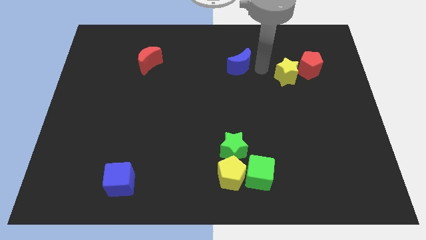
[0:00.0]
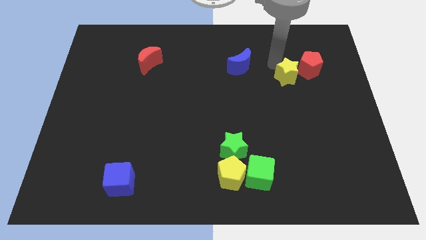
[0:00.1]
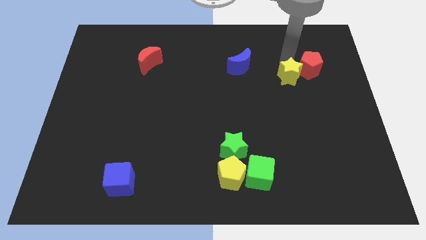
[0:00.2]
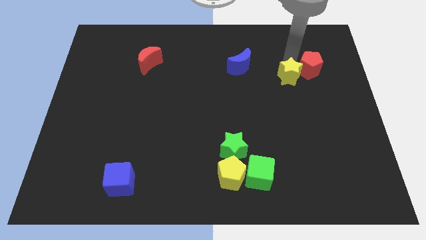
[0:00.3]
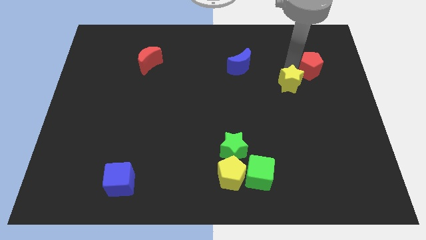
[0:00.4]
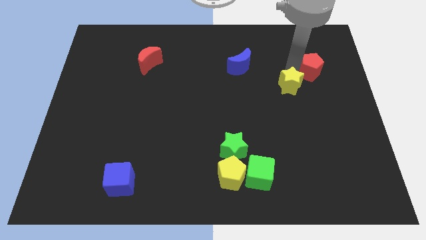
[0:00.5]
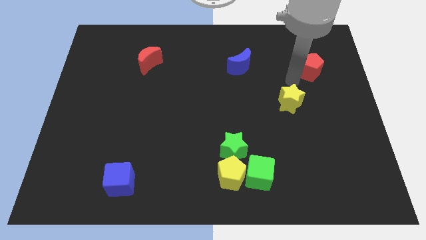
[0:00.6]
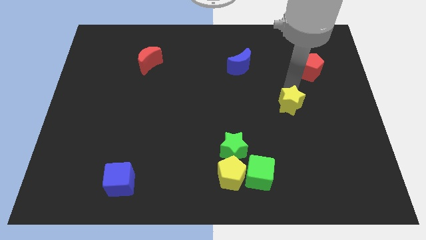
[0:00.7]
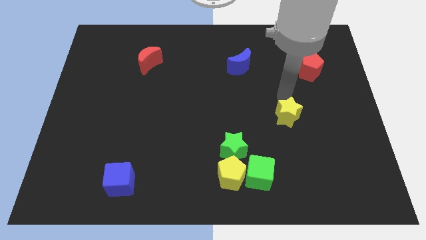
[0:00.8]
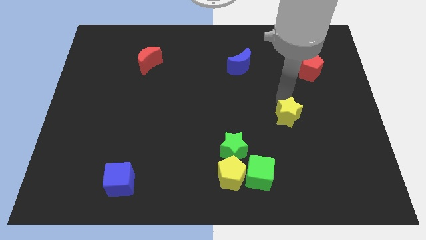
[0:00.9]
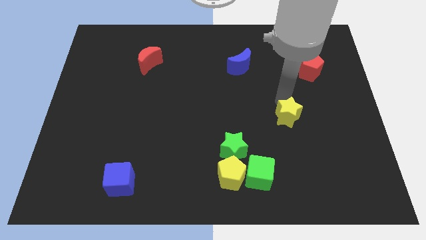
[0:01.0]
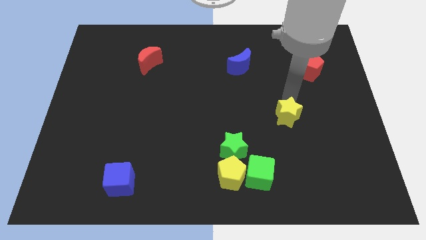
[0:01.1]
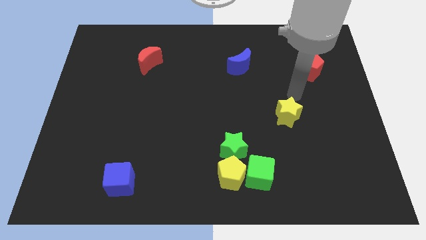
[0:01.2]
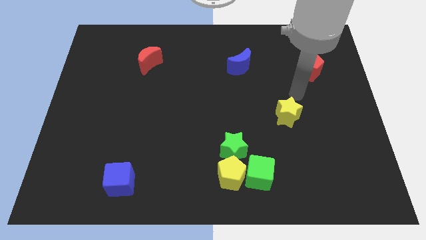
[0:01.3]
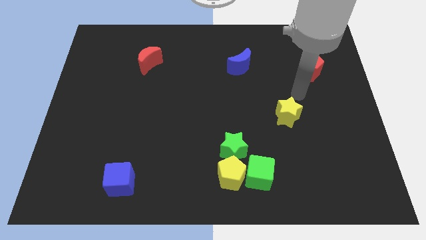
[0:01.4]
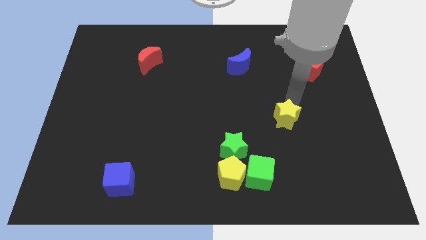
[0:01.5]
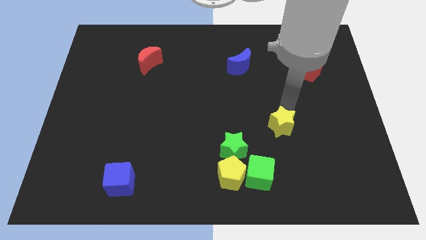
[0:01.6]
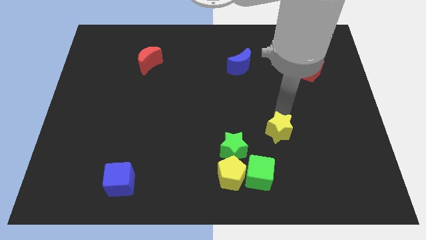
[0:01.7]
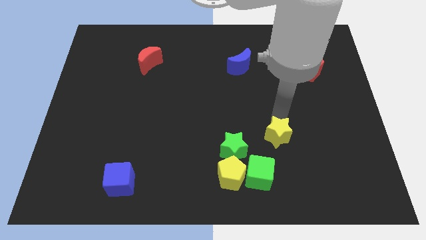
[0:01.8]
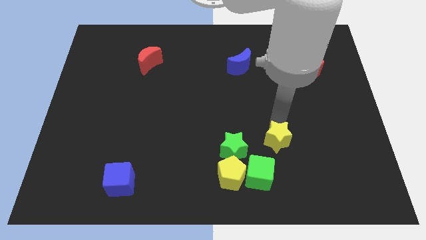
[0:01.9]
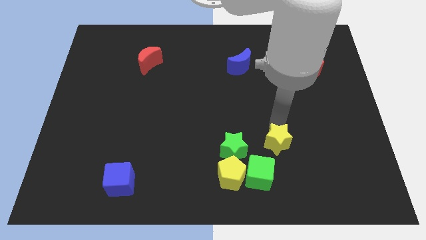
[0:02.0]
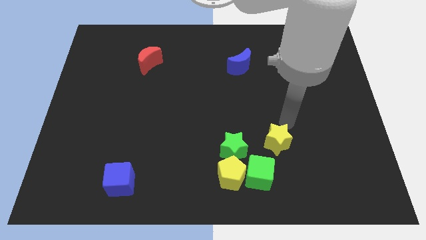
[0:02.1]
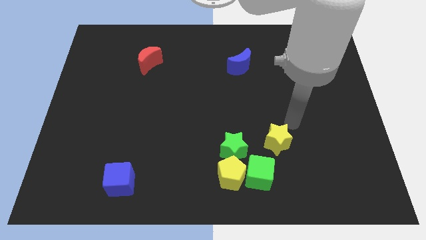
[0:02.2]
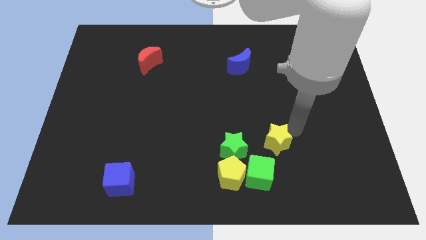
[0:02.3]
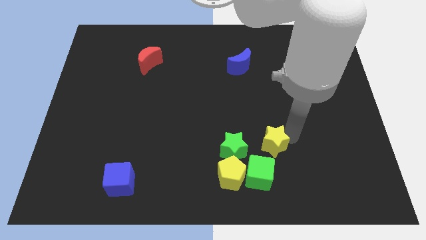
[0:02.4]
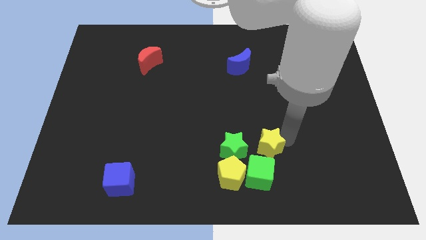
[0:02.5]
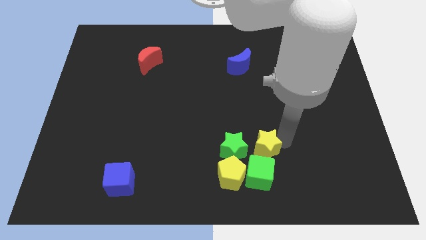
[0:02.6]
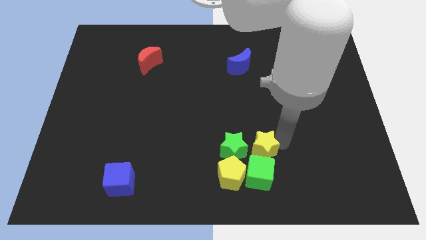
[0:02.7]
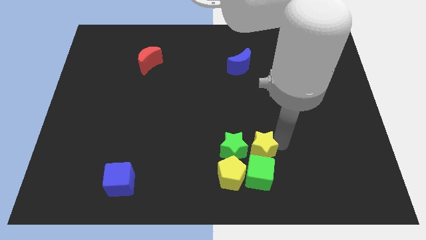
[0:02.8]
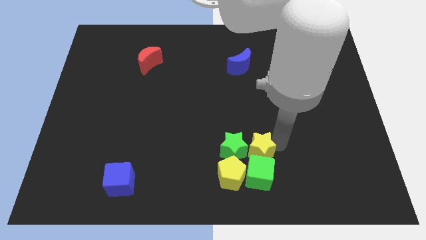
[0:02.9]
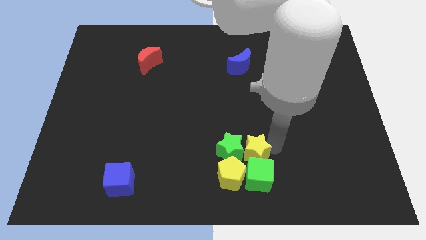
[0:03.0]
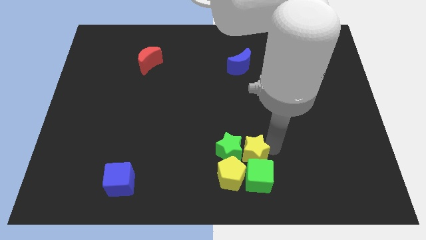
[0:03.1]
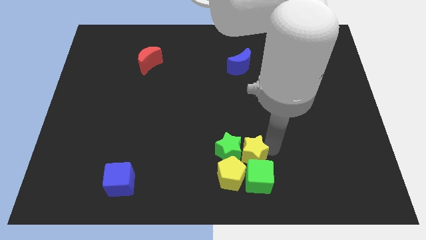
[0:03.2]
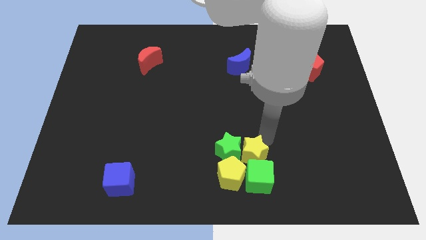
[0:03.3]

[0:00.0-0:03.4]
add the yellow star to the group of both green blocks and yellow pentagon

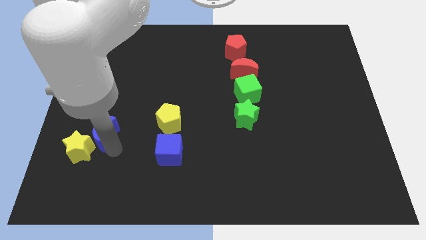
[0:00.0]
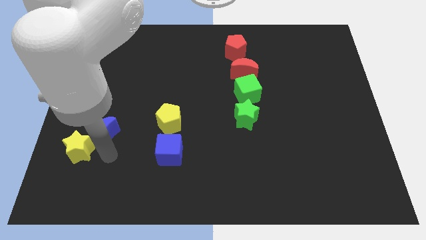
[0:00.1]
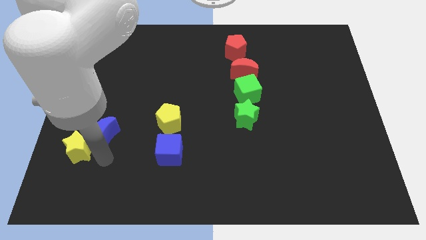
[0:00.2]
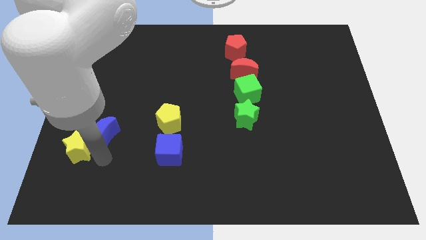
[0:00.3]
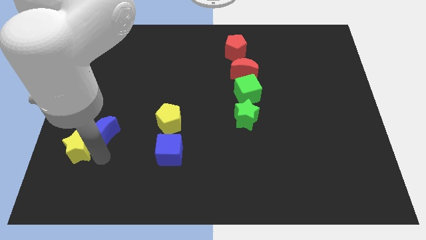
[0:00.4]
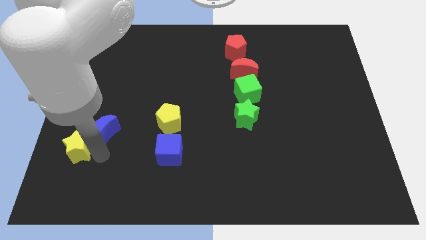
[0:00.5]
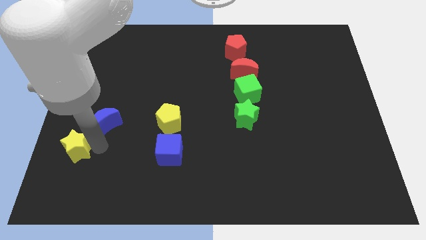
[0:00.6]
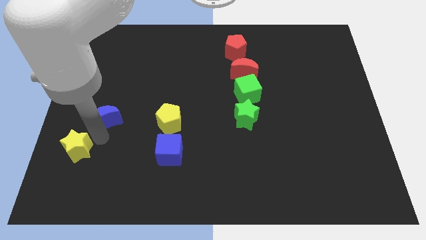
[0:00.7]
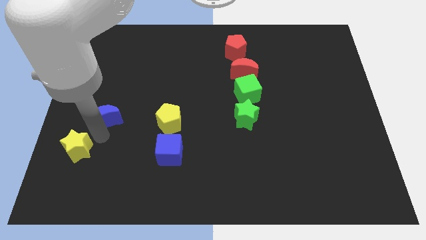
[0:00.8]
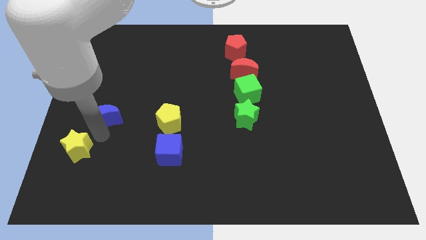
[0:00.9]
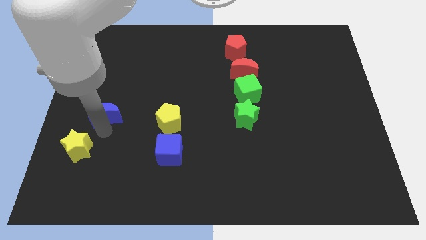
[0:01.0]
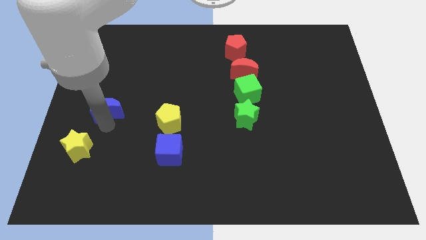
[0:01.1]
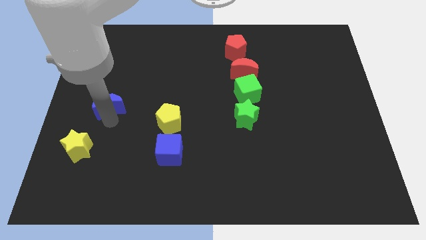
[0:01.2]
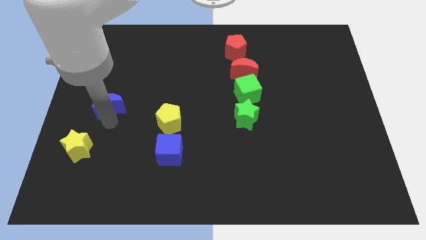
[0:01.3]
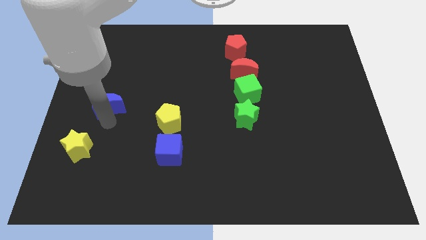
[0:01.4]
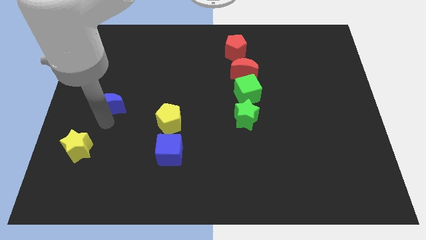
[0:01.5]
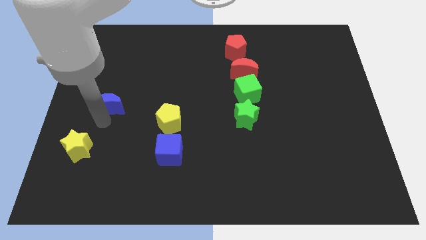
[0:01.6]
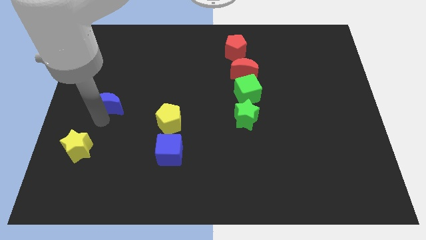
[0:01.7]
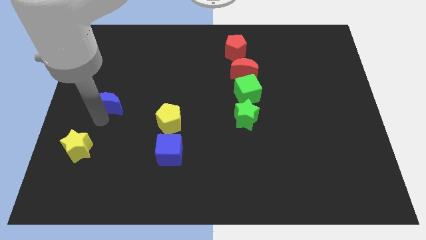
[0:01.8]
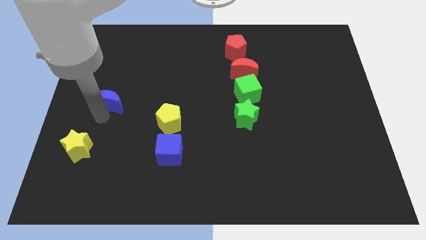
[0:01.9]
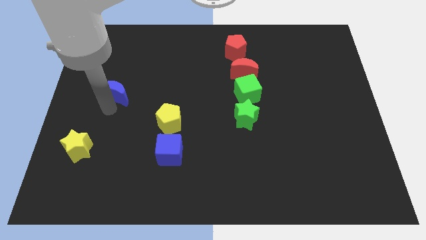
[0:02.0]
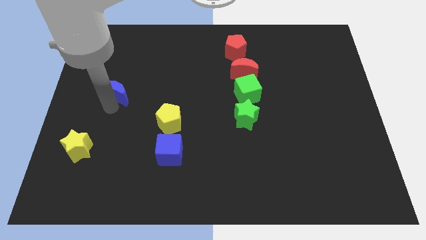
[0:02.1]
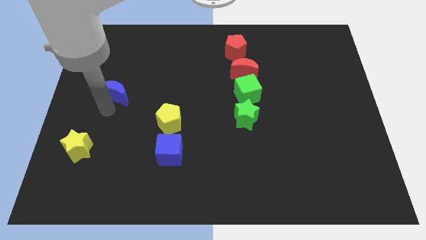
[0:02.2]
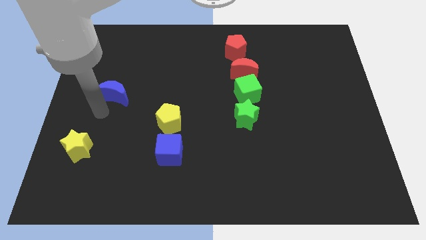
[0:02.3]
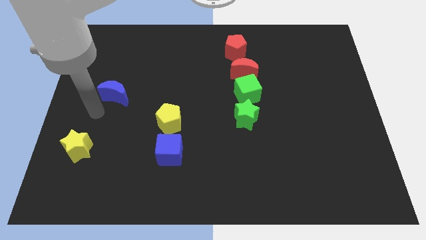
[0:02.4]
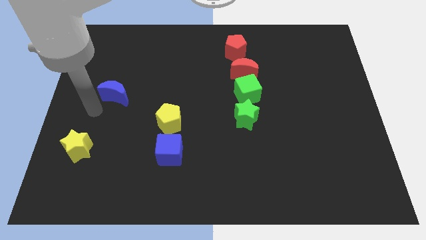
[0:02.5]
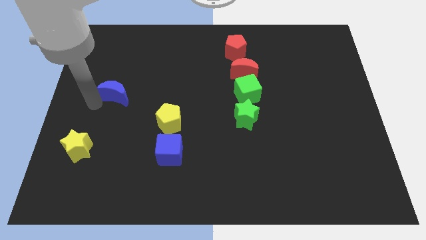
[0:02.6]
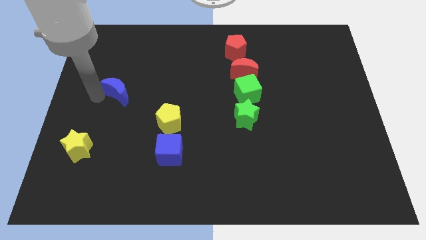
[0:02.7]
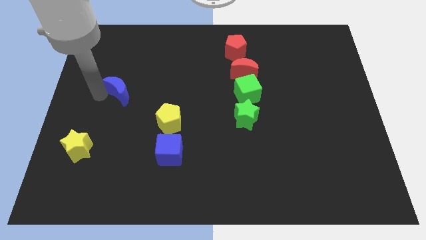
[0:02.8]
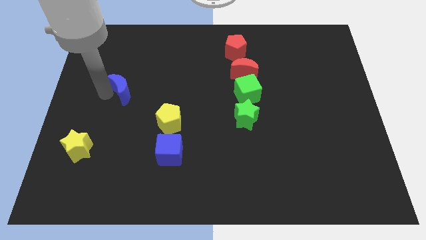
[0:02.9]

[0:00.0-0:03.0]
place the blue moon diagonally to the right of the yellow star

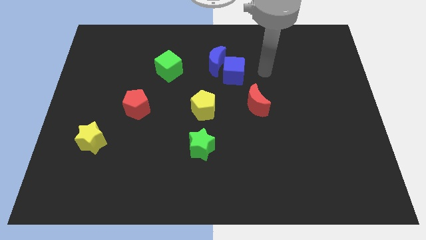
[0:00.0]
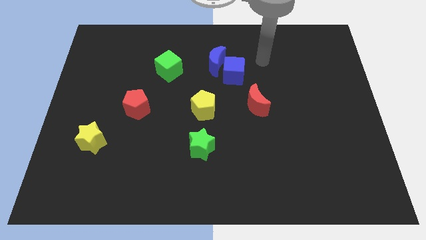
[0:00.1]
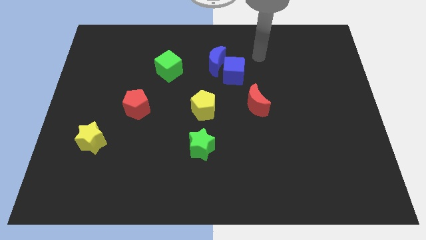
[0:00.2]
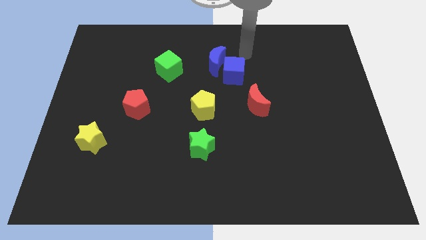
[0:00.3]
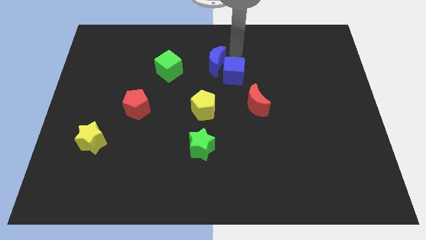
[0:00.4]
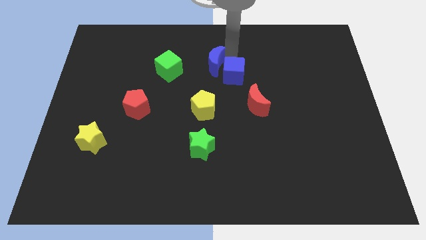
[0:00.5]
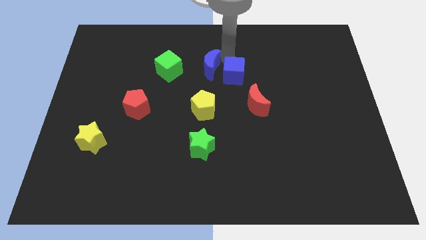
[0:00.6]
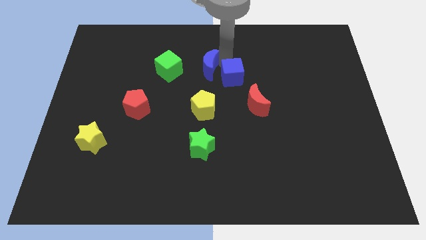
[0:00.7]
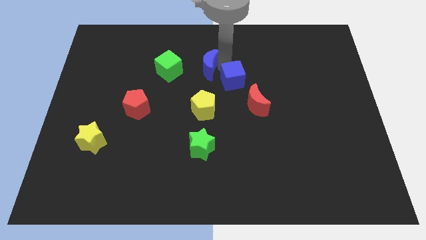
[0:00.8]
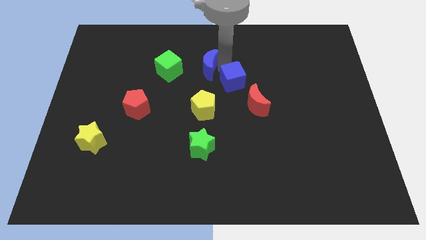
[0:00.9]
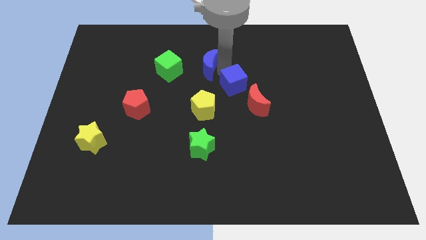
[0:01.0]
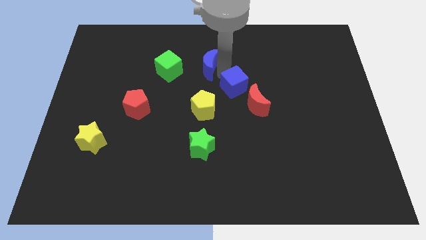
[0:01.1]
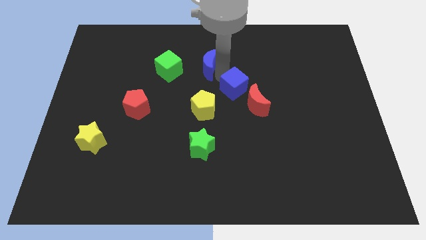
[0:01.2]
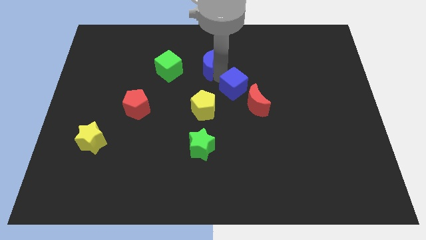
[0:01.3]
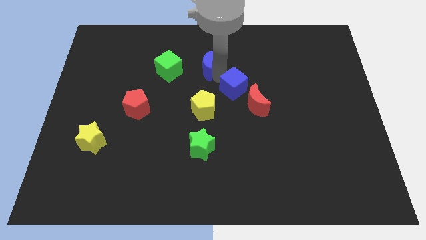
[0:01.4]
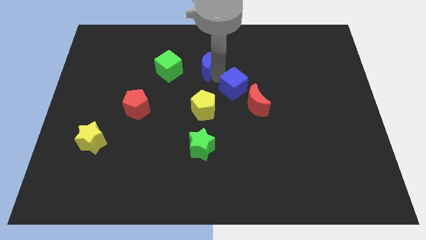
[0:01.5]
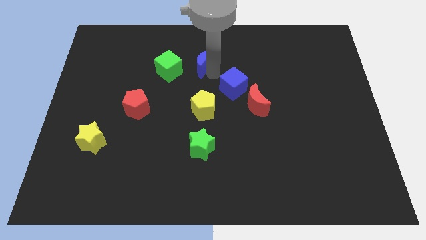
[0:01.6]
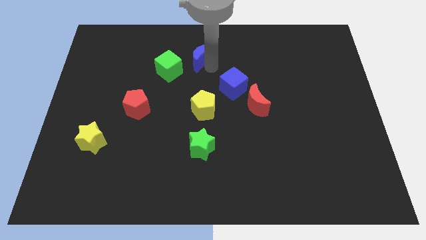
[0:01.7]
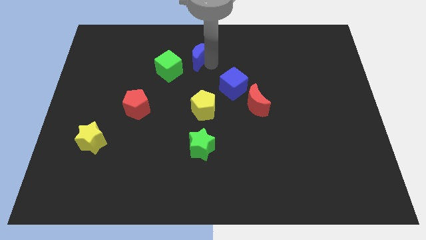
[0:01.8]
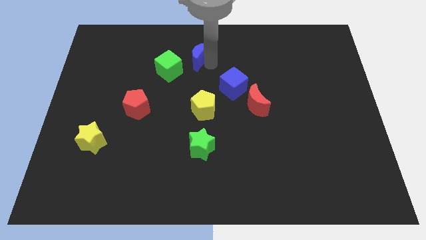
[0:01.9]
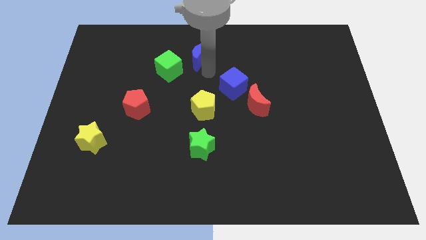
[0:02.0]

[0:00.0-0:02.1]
separate the blue blocks from each other

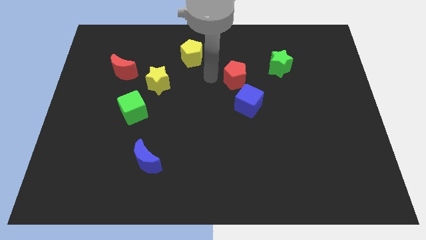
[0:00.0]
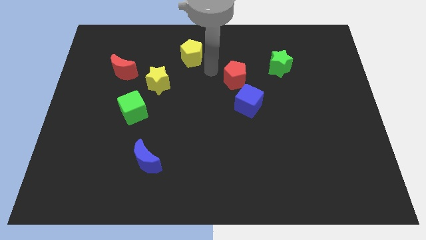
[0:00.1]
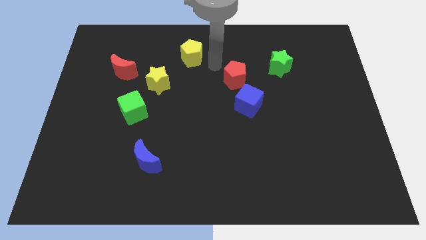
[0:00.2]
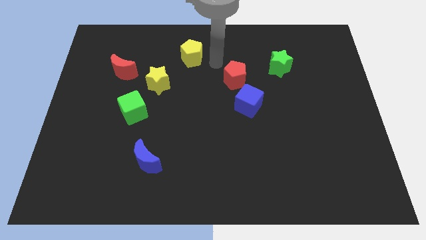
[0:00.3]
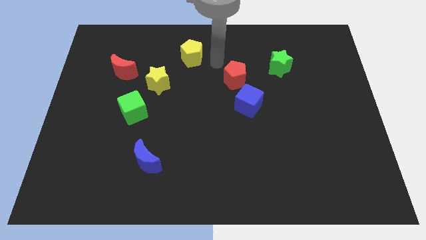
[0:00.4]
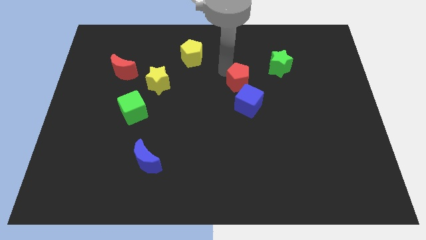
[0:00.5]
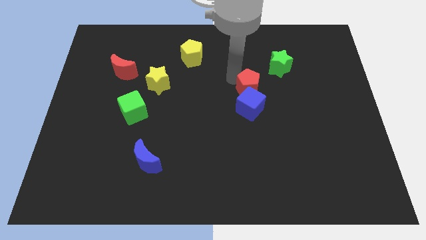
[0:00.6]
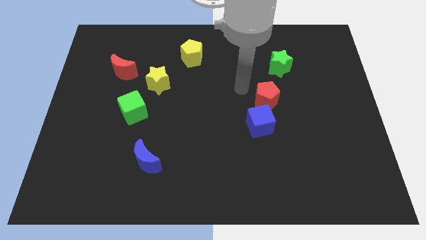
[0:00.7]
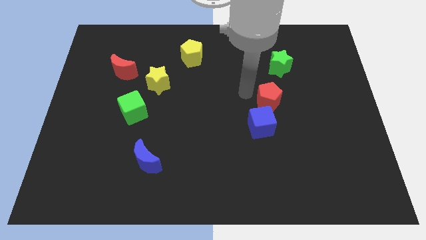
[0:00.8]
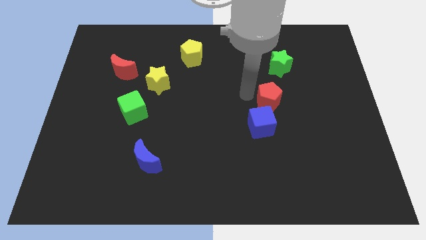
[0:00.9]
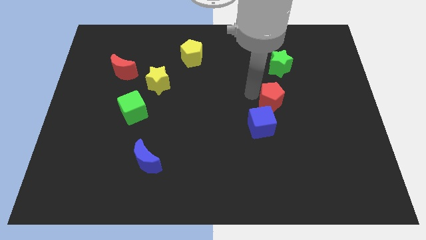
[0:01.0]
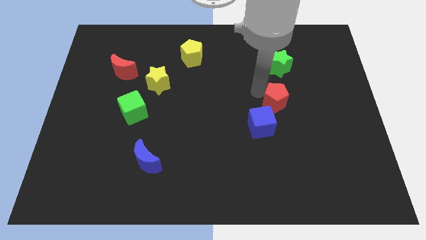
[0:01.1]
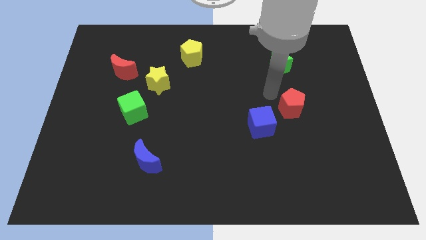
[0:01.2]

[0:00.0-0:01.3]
push the red pentagon in to the blue cube
